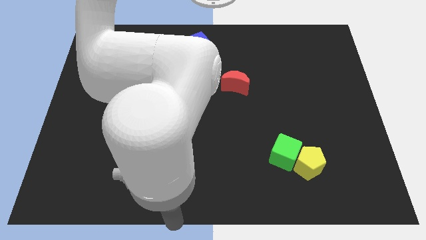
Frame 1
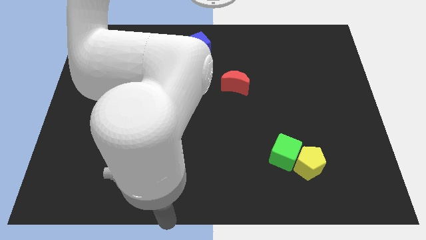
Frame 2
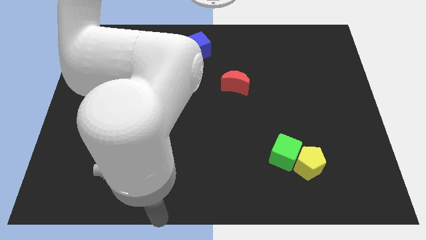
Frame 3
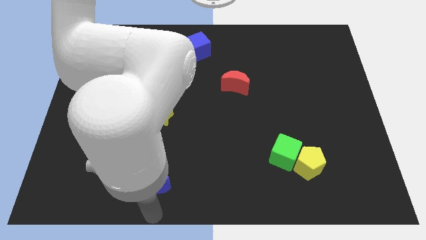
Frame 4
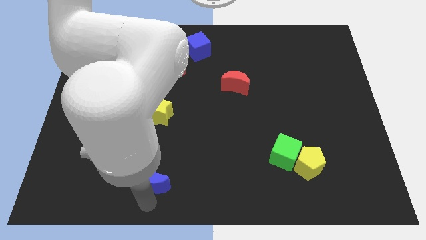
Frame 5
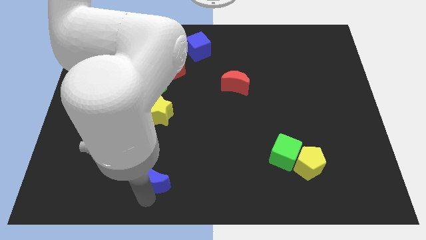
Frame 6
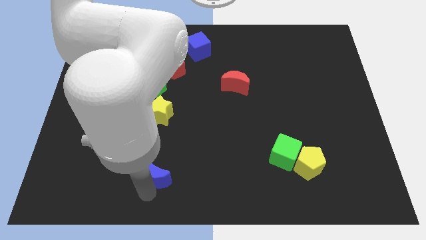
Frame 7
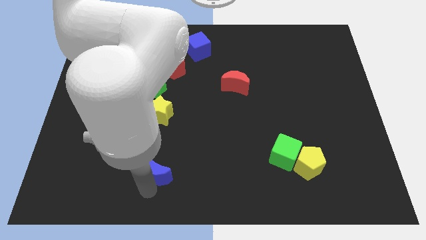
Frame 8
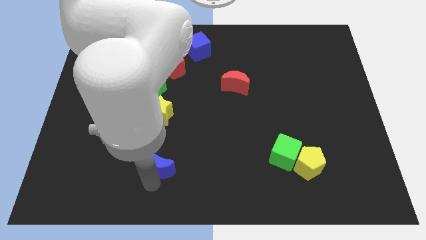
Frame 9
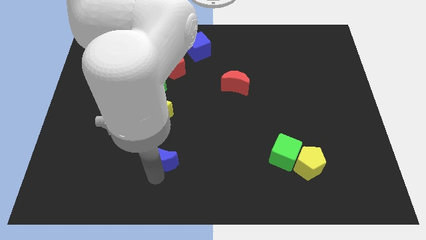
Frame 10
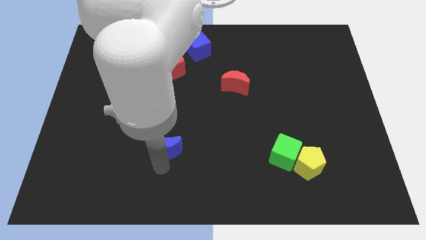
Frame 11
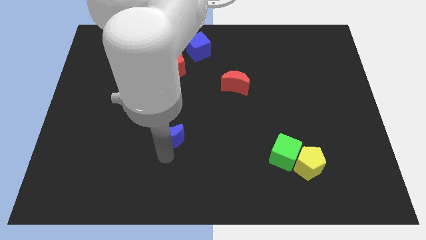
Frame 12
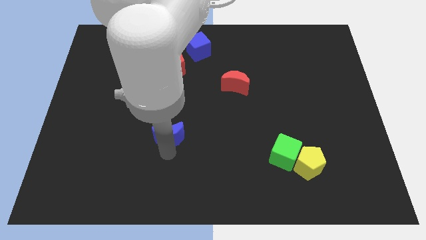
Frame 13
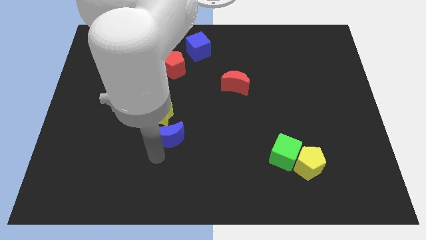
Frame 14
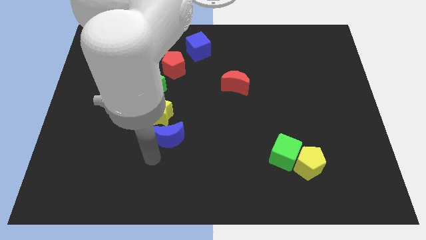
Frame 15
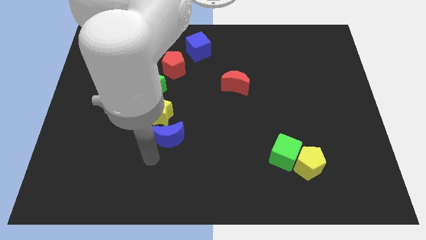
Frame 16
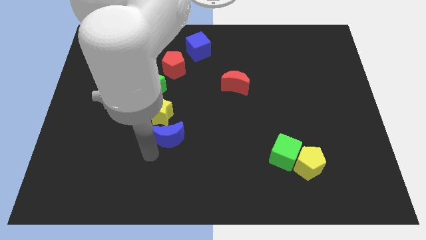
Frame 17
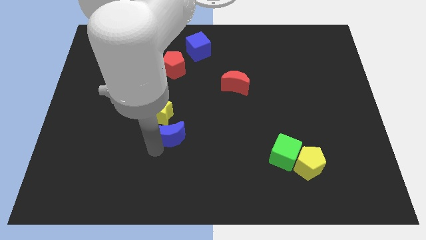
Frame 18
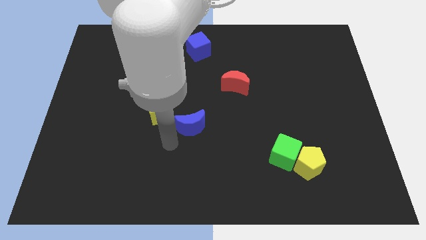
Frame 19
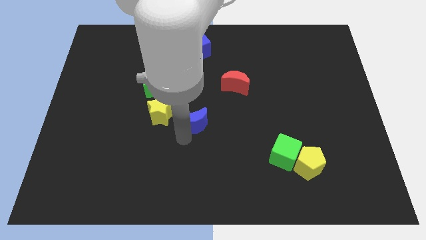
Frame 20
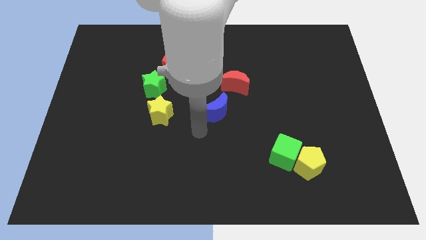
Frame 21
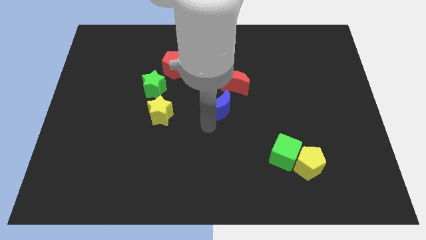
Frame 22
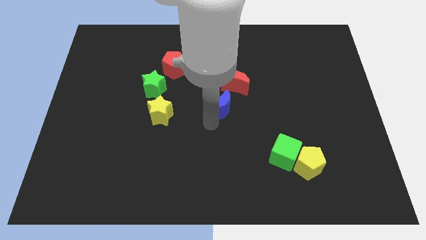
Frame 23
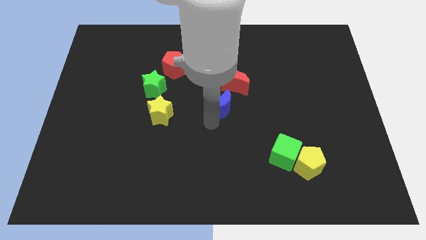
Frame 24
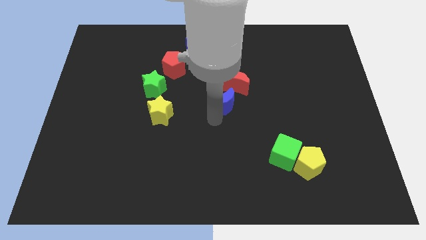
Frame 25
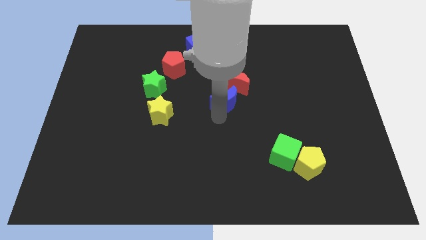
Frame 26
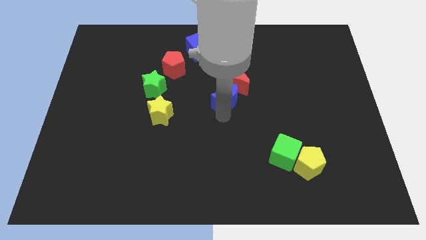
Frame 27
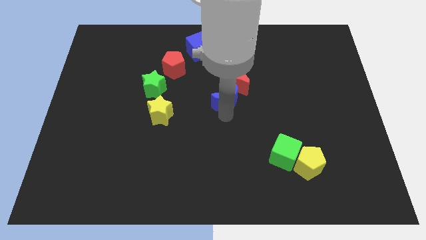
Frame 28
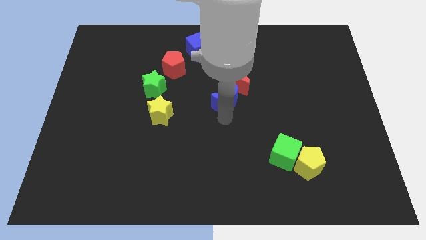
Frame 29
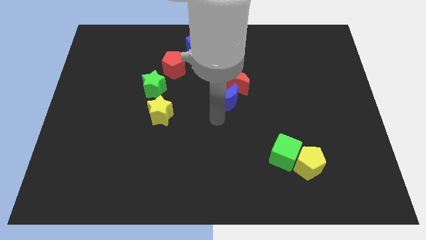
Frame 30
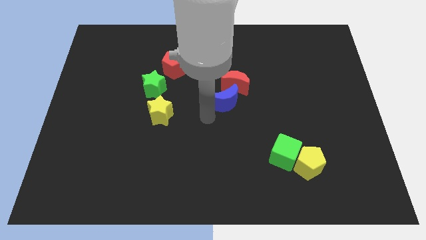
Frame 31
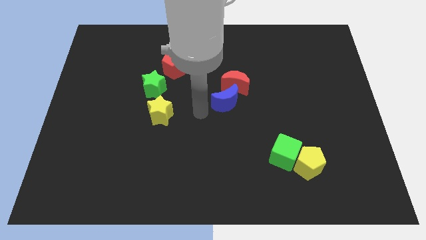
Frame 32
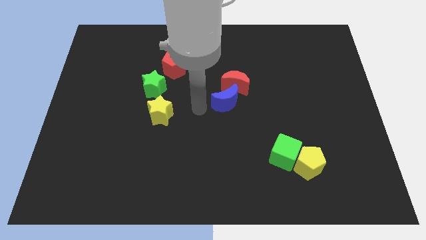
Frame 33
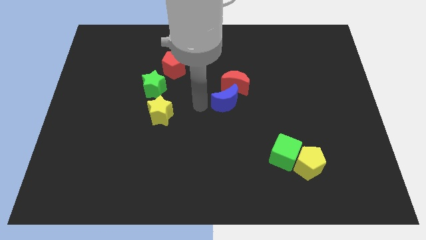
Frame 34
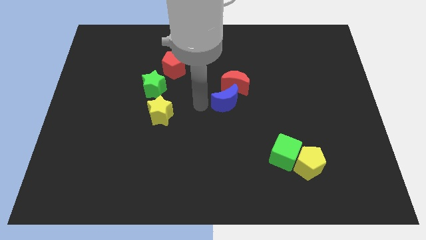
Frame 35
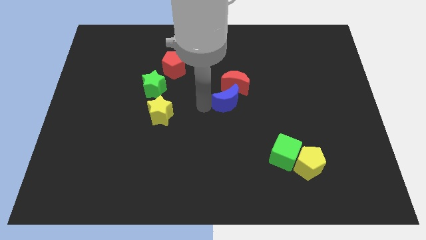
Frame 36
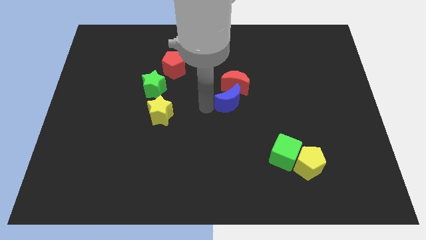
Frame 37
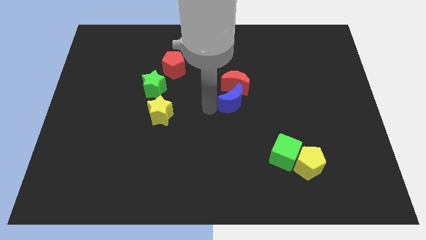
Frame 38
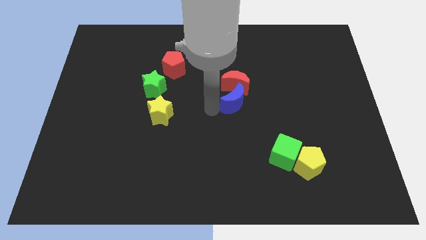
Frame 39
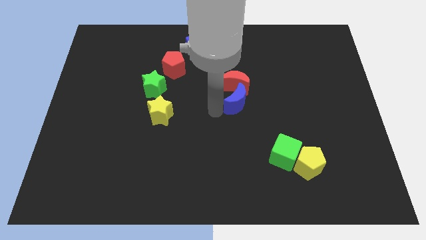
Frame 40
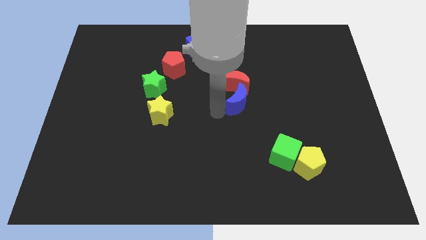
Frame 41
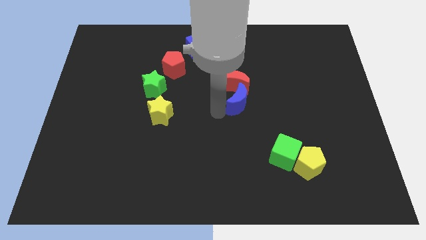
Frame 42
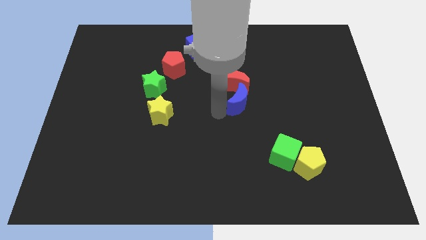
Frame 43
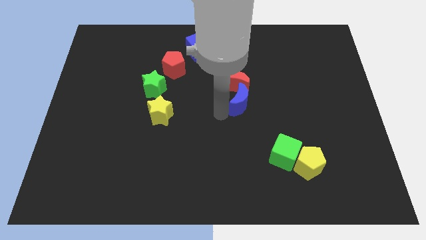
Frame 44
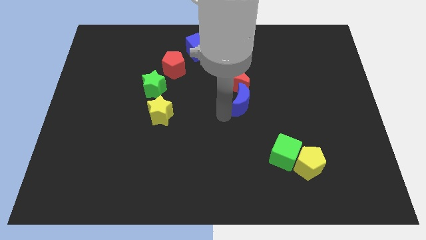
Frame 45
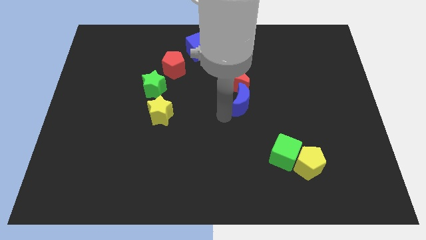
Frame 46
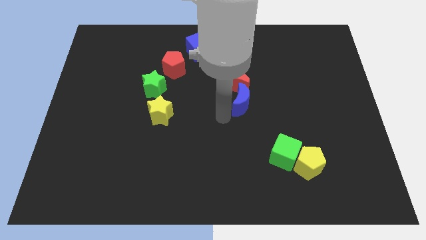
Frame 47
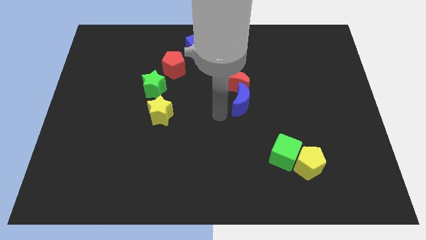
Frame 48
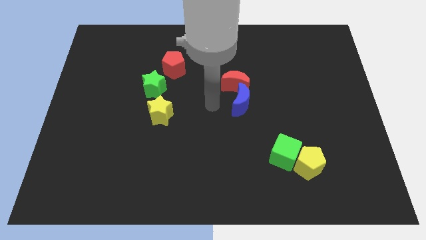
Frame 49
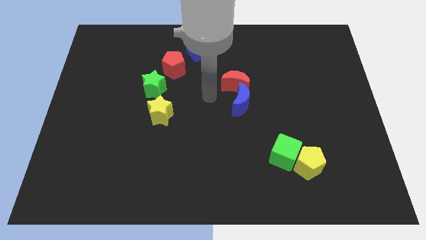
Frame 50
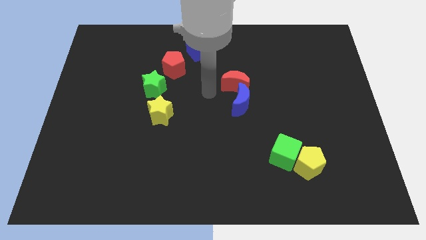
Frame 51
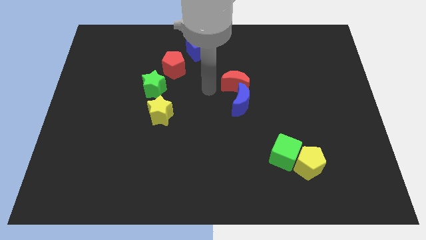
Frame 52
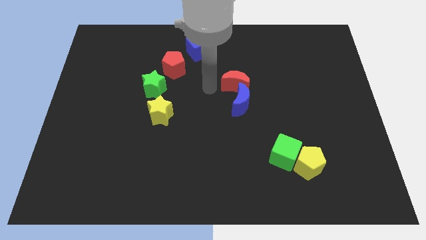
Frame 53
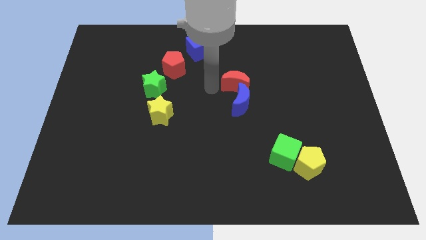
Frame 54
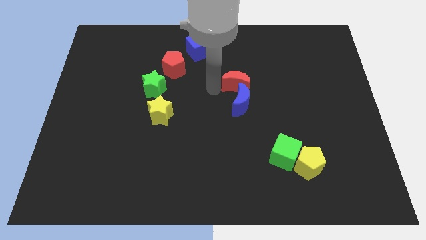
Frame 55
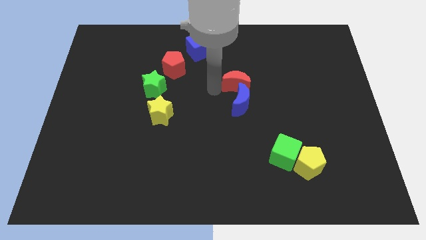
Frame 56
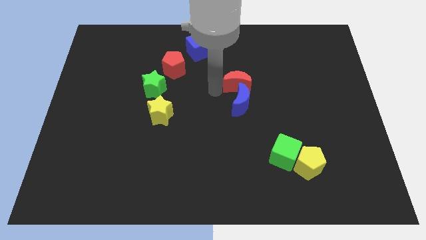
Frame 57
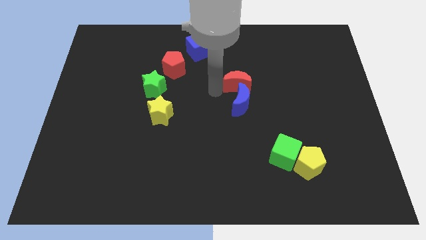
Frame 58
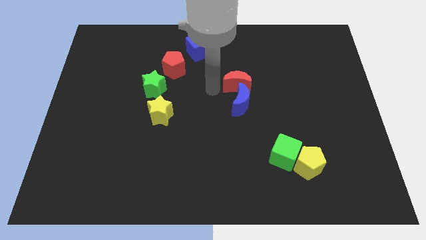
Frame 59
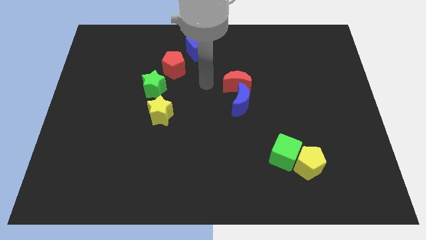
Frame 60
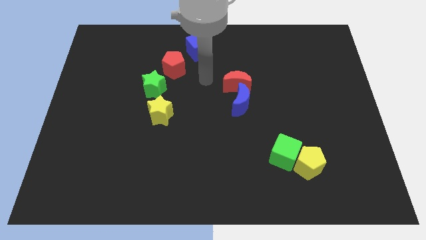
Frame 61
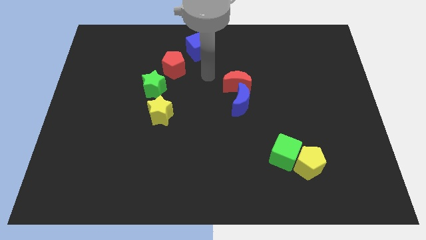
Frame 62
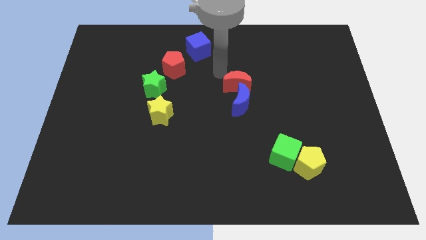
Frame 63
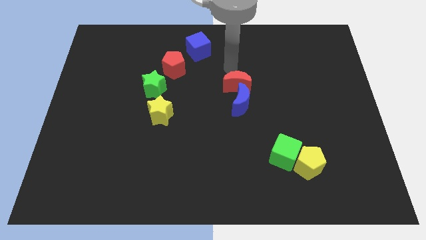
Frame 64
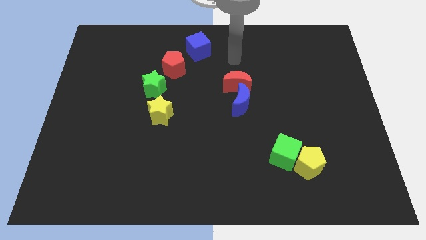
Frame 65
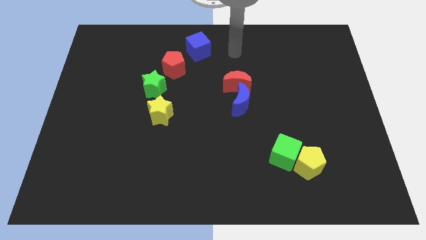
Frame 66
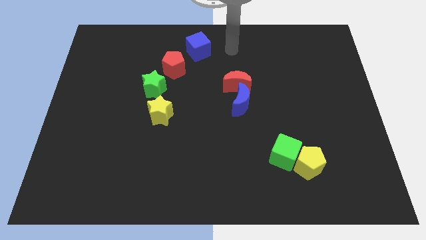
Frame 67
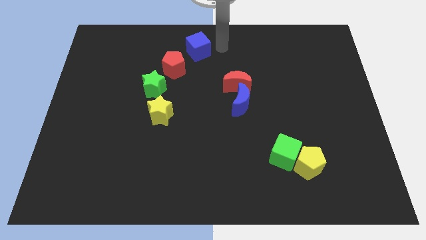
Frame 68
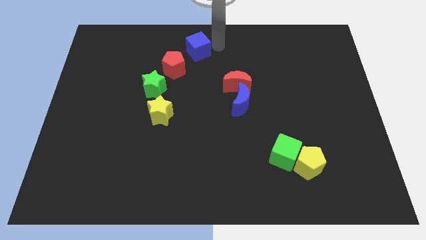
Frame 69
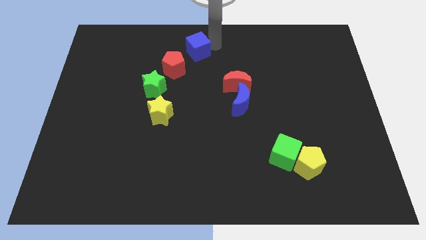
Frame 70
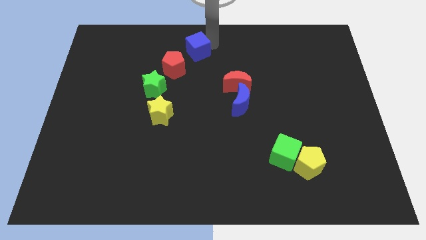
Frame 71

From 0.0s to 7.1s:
move the blue crescent at the bottom of the red moon

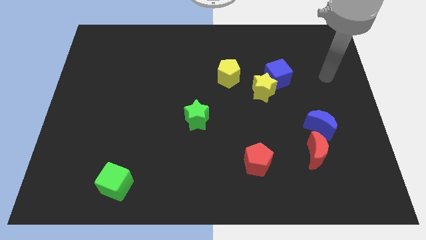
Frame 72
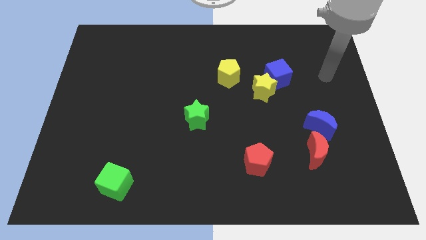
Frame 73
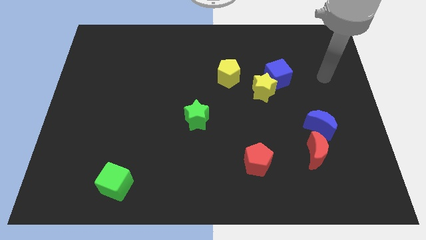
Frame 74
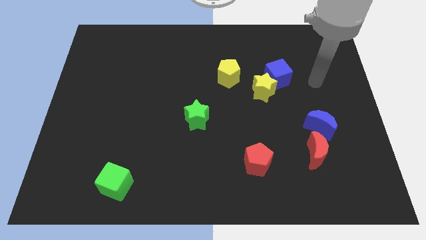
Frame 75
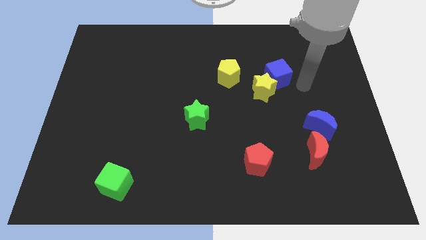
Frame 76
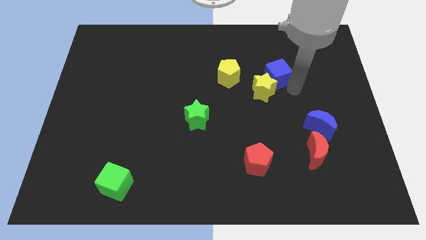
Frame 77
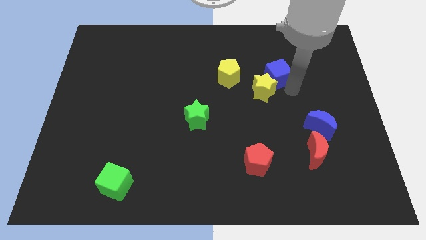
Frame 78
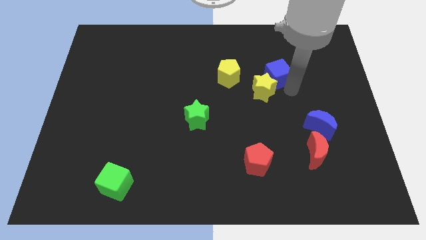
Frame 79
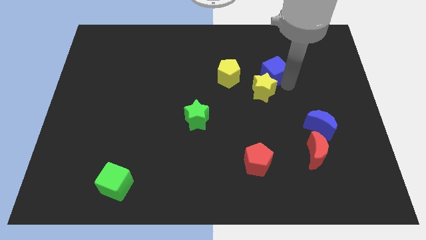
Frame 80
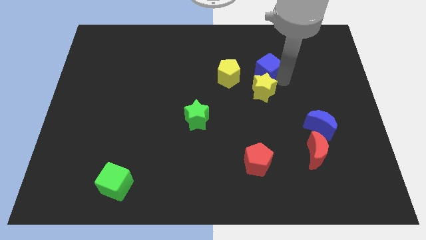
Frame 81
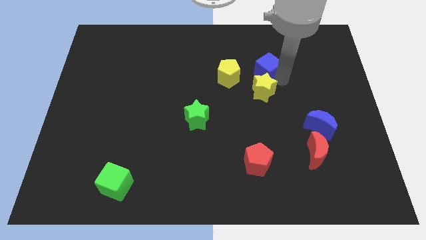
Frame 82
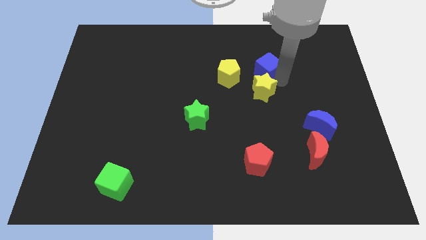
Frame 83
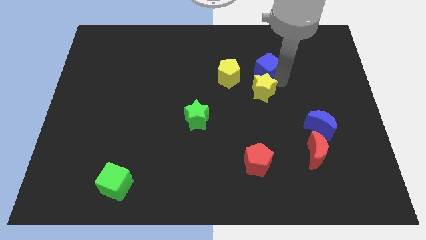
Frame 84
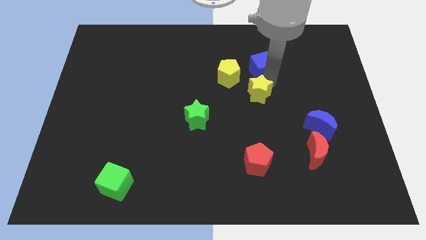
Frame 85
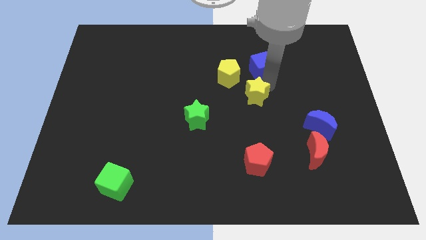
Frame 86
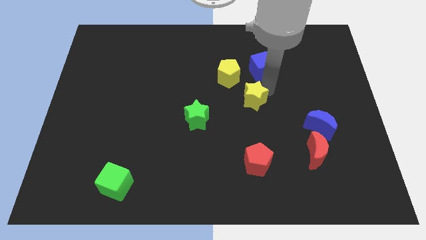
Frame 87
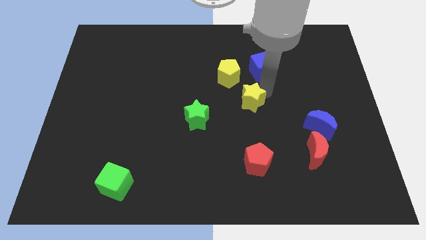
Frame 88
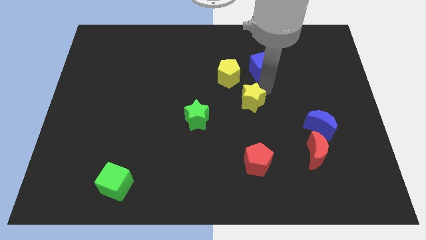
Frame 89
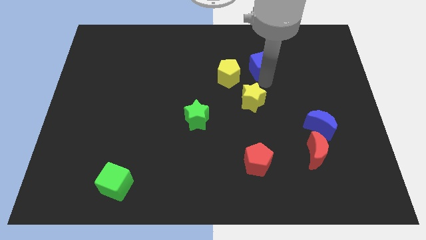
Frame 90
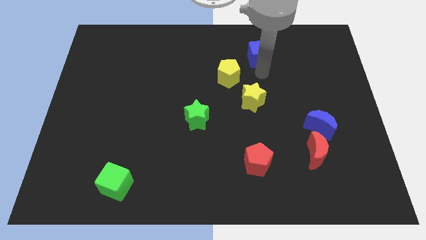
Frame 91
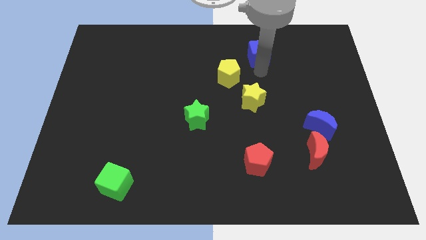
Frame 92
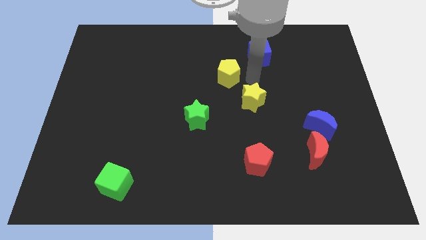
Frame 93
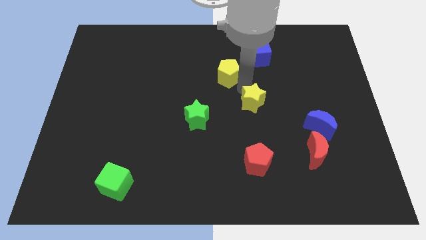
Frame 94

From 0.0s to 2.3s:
go and separate the yellow star and the blue cube
